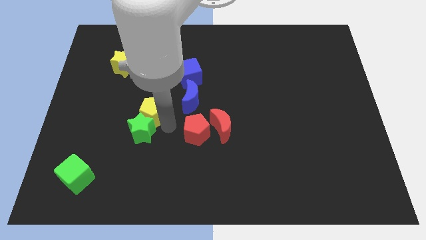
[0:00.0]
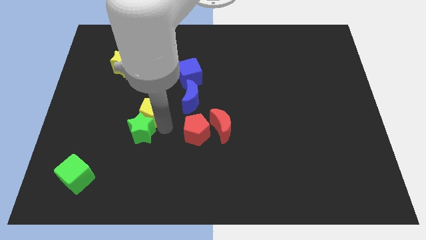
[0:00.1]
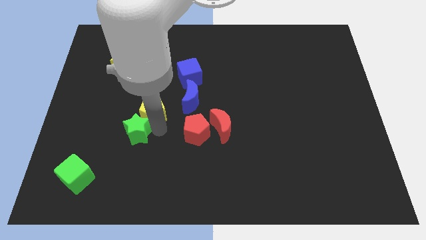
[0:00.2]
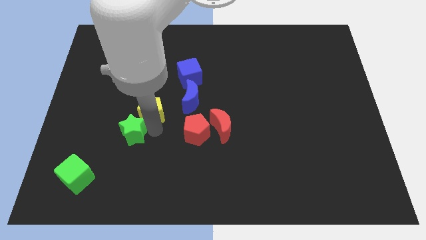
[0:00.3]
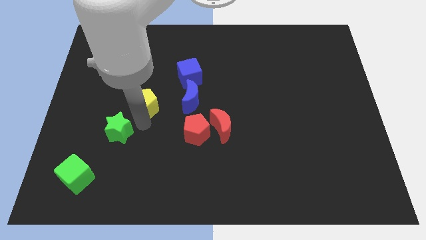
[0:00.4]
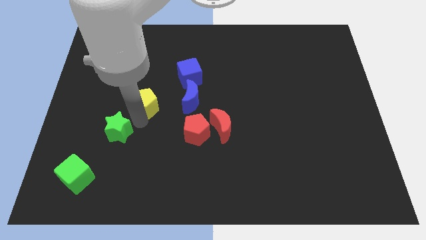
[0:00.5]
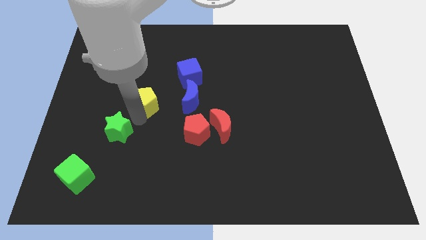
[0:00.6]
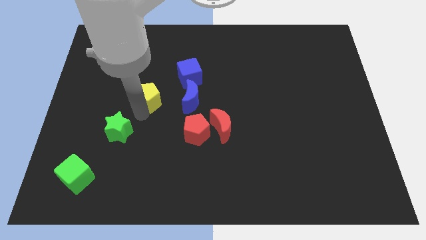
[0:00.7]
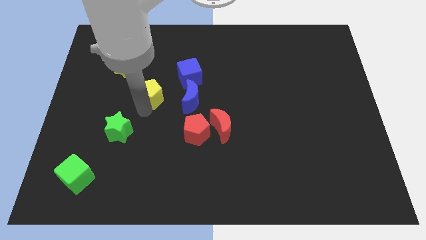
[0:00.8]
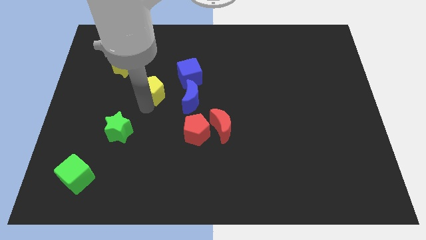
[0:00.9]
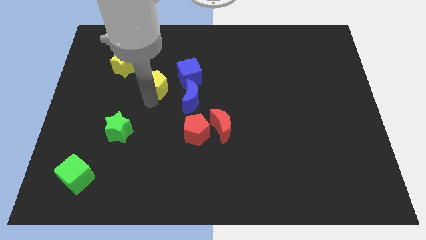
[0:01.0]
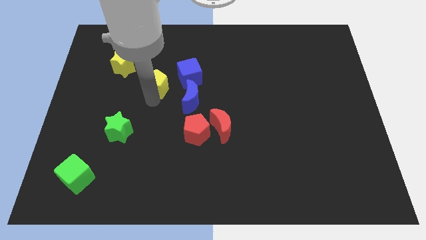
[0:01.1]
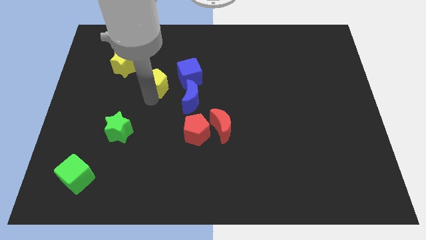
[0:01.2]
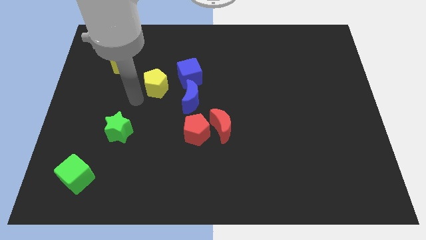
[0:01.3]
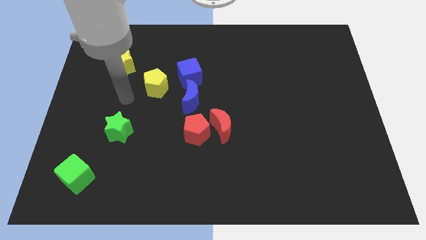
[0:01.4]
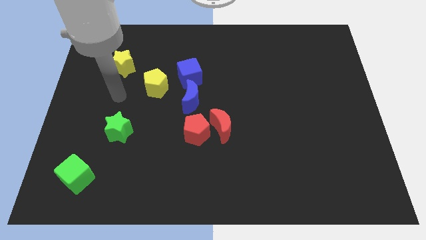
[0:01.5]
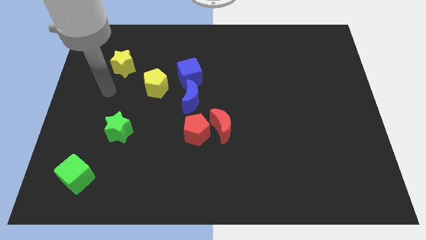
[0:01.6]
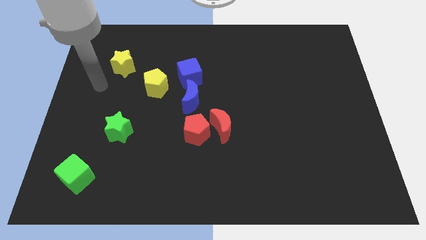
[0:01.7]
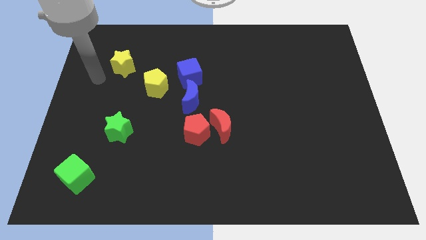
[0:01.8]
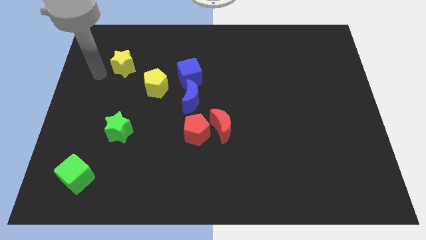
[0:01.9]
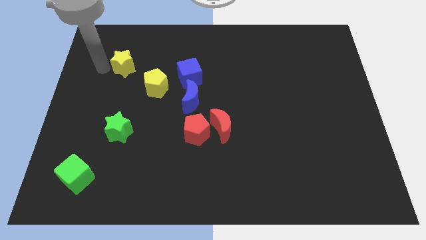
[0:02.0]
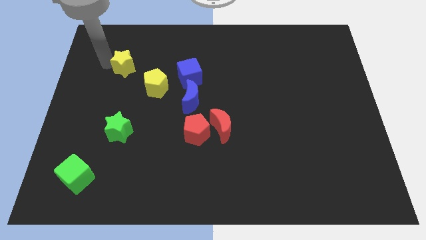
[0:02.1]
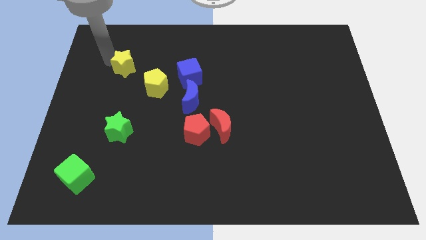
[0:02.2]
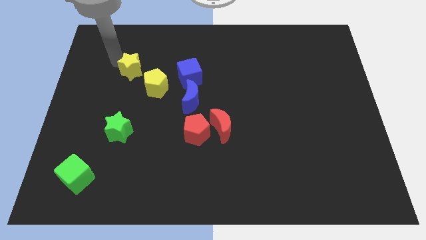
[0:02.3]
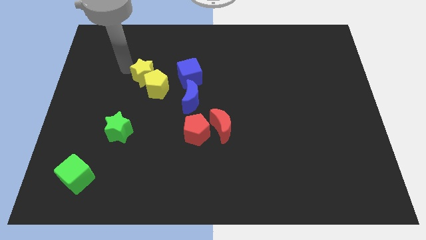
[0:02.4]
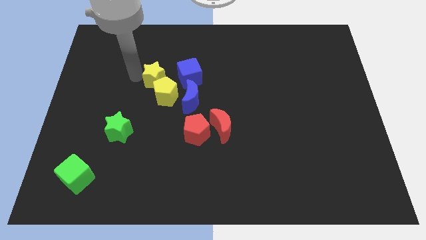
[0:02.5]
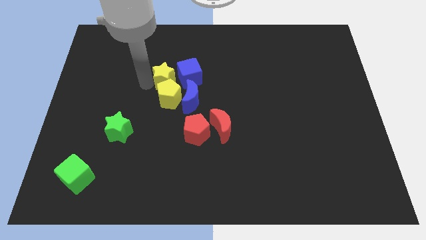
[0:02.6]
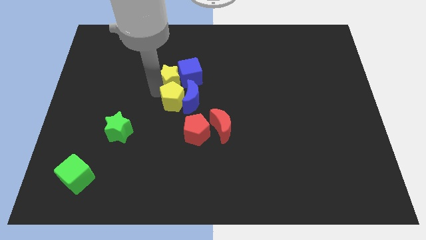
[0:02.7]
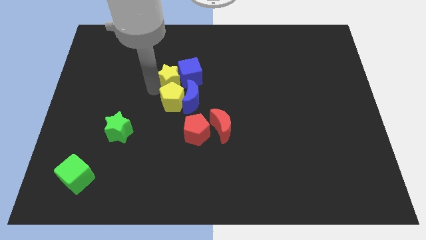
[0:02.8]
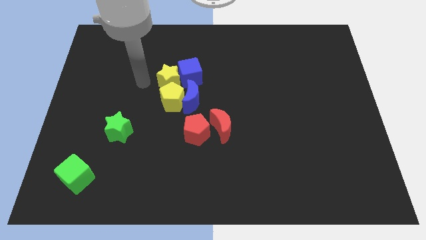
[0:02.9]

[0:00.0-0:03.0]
move the yellow star yellow pentagon into the blue blocks

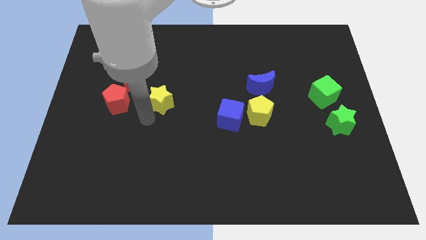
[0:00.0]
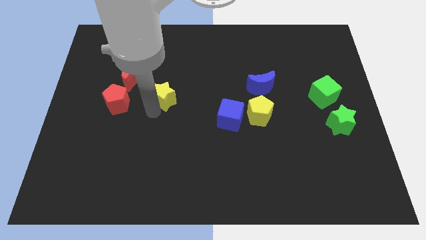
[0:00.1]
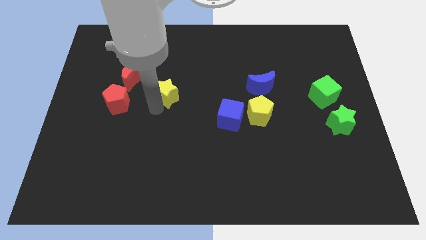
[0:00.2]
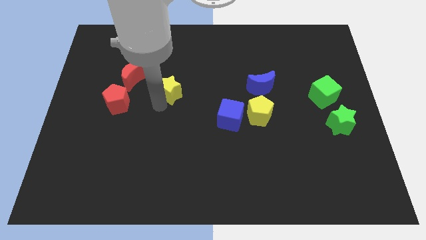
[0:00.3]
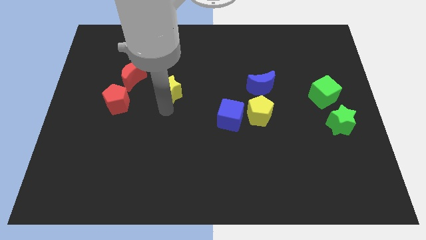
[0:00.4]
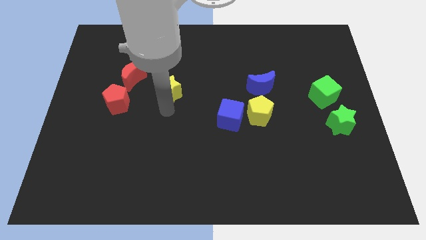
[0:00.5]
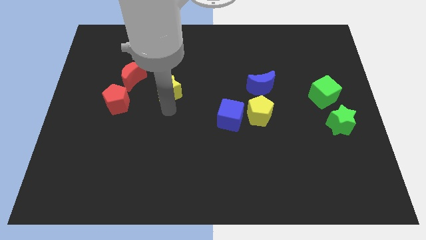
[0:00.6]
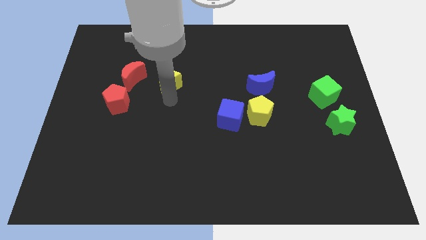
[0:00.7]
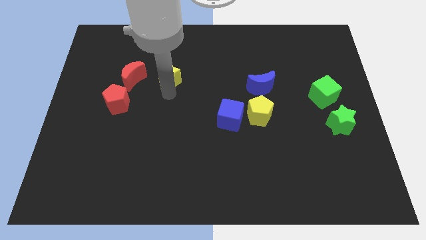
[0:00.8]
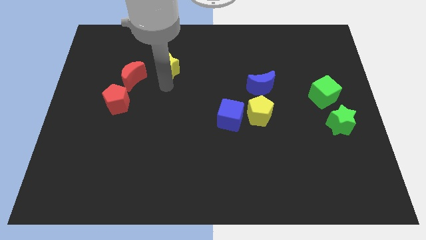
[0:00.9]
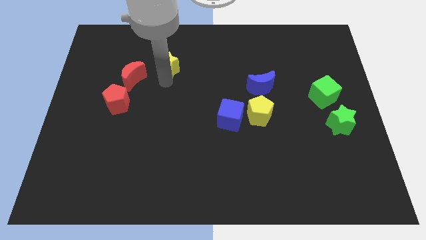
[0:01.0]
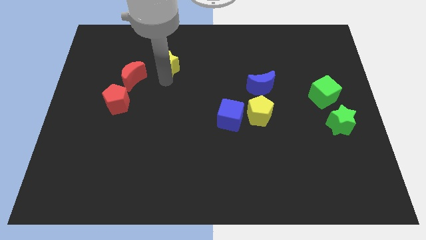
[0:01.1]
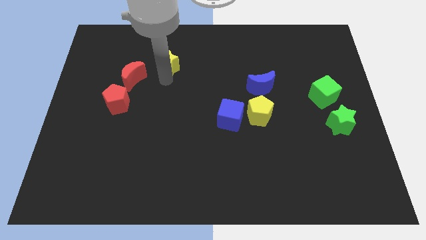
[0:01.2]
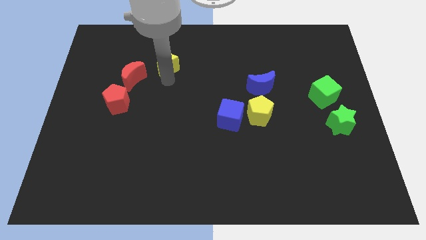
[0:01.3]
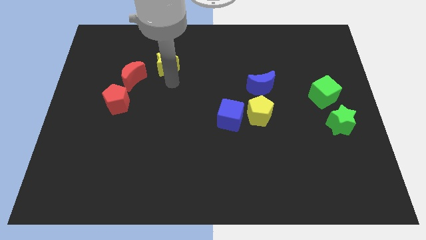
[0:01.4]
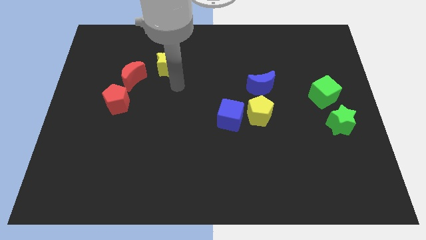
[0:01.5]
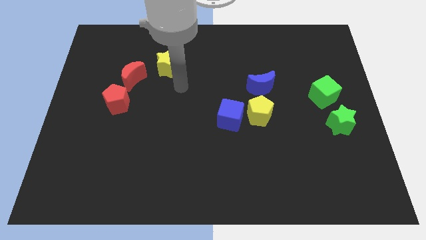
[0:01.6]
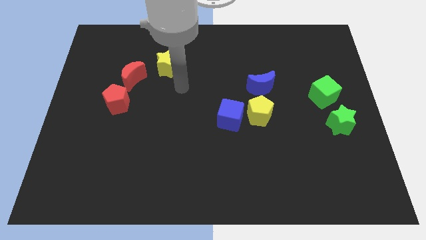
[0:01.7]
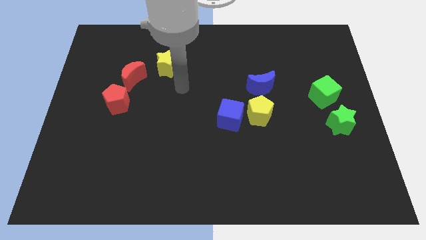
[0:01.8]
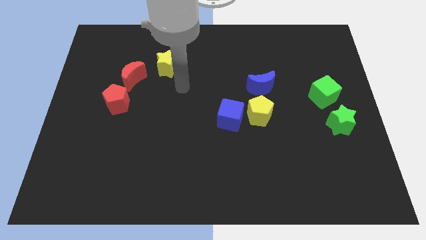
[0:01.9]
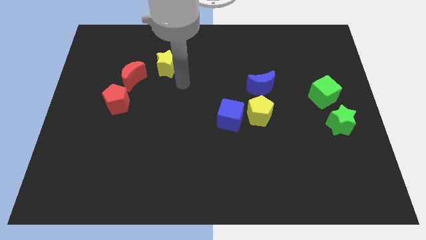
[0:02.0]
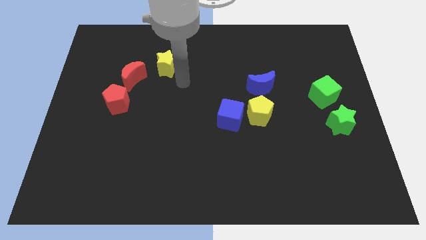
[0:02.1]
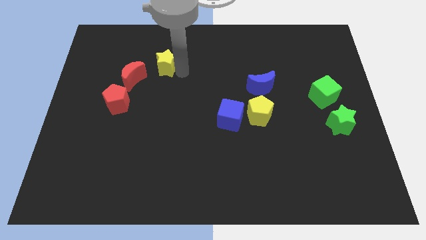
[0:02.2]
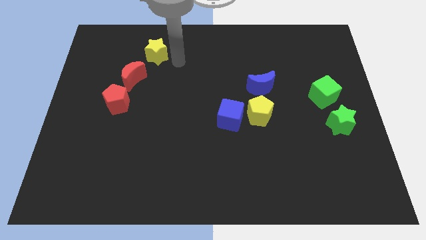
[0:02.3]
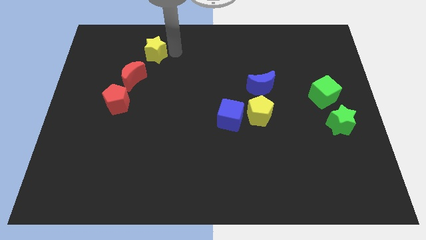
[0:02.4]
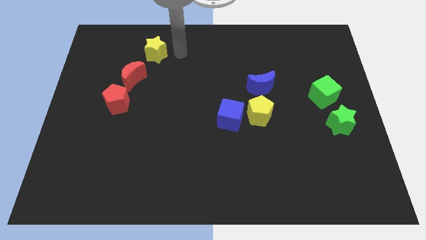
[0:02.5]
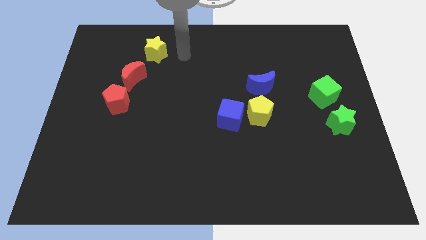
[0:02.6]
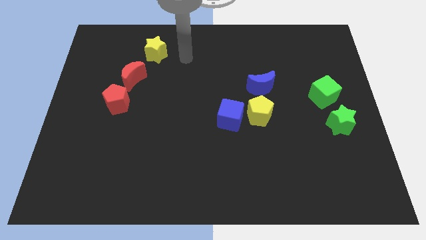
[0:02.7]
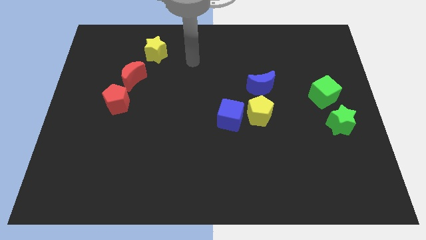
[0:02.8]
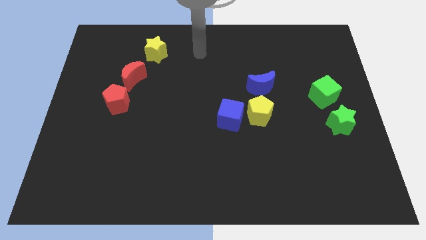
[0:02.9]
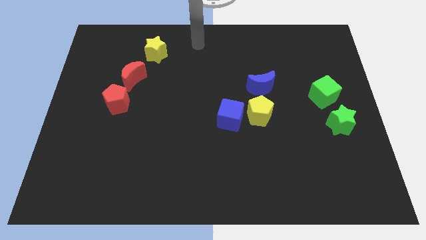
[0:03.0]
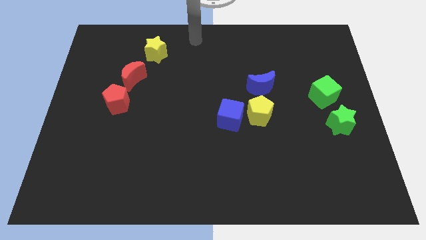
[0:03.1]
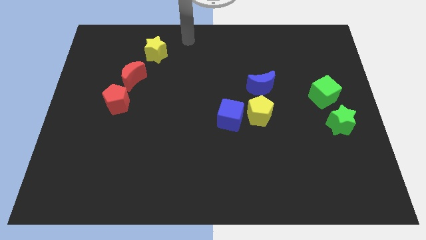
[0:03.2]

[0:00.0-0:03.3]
move the yellow star to the top side of the red moon

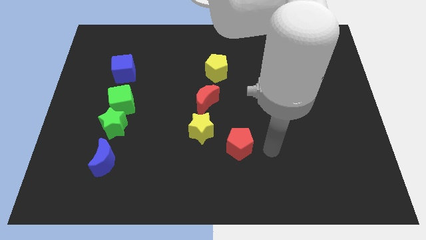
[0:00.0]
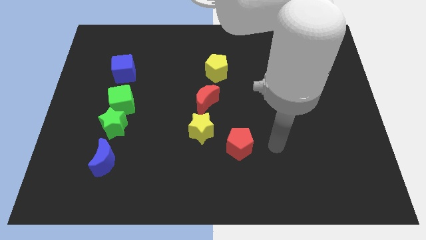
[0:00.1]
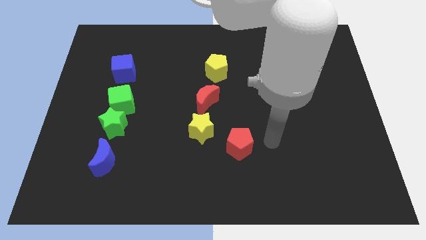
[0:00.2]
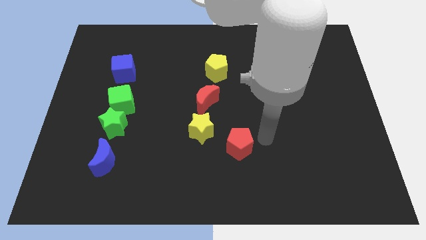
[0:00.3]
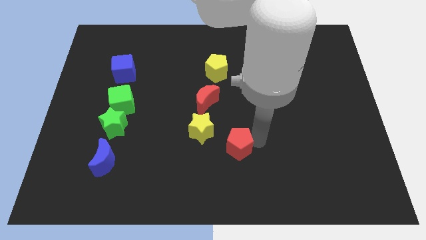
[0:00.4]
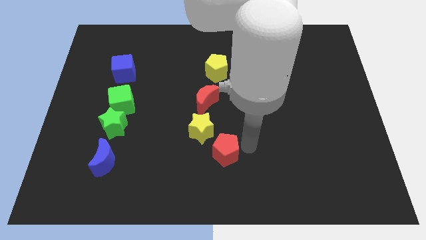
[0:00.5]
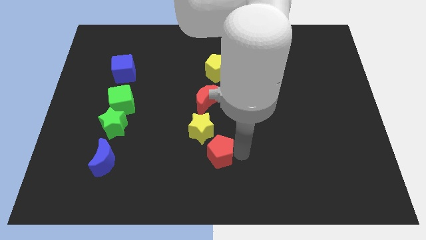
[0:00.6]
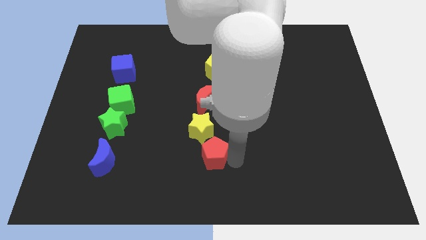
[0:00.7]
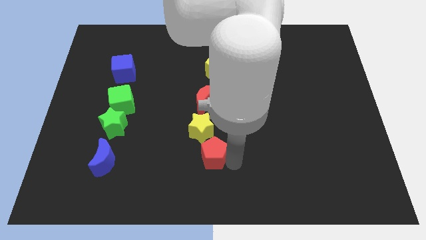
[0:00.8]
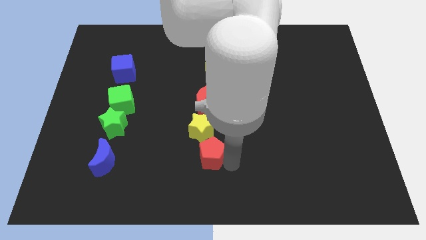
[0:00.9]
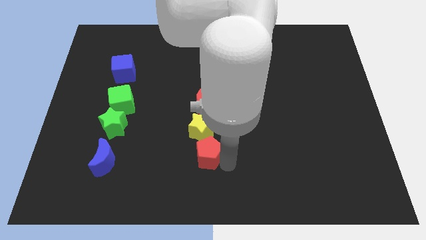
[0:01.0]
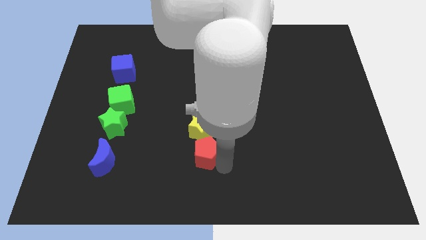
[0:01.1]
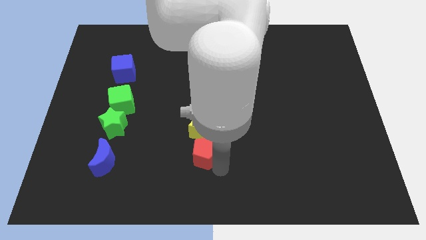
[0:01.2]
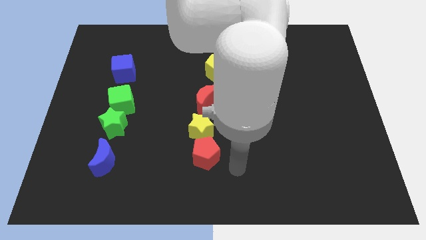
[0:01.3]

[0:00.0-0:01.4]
place the red pentagon to the bottom of the red pentagon

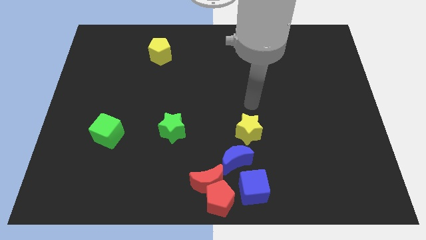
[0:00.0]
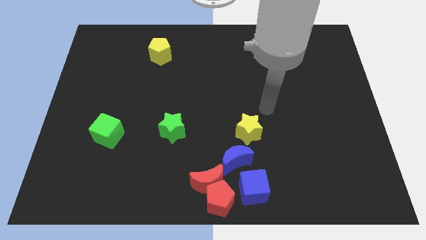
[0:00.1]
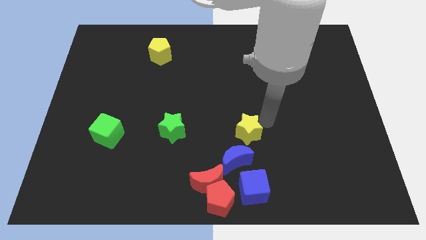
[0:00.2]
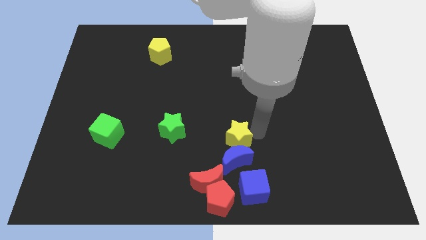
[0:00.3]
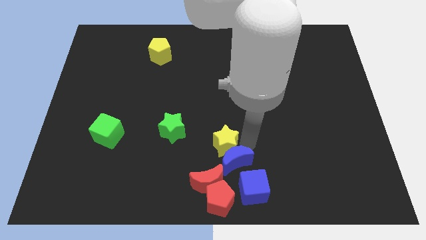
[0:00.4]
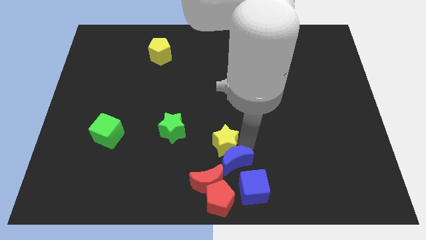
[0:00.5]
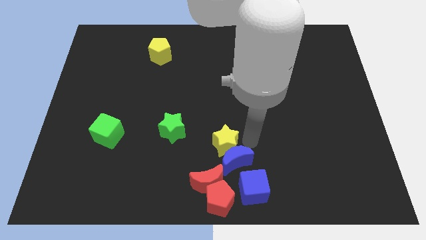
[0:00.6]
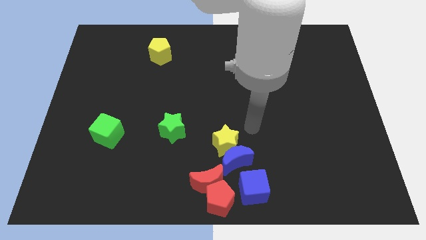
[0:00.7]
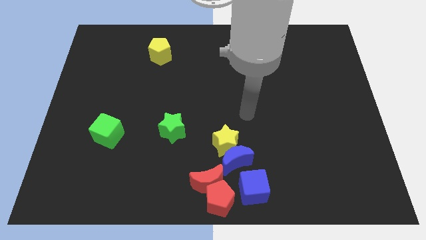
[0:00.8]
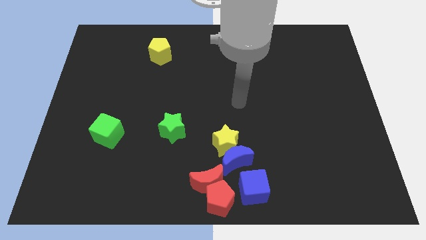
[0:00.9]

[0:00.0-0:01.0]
place the yellow star above the blue moon

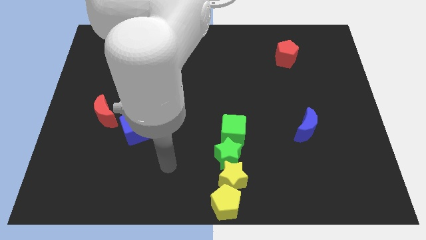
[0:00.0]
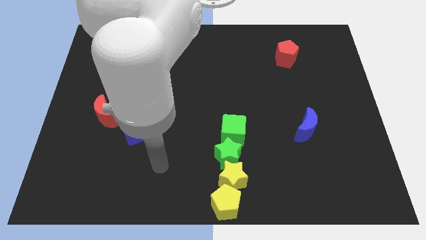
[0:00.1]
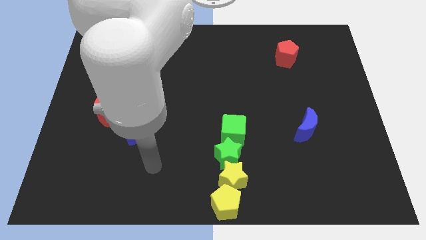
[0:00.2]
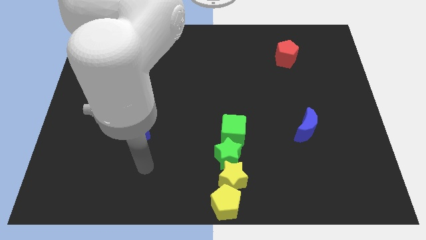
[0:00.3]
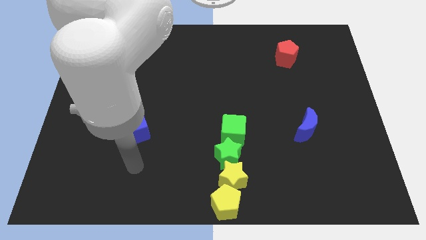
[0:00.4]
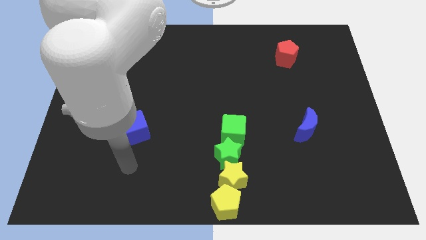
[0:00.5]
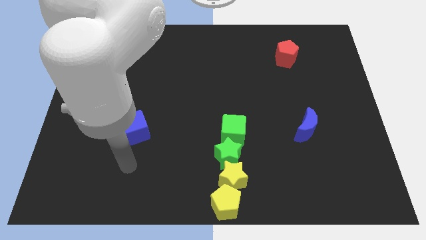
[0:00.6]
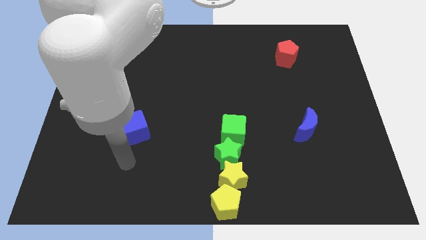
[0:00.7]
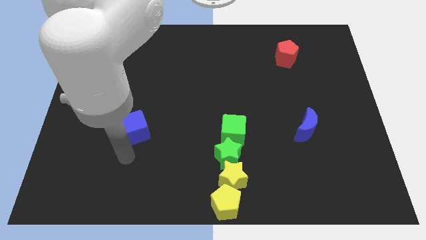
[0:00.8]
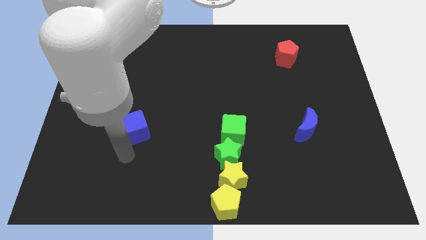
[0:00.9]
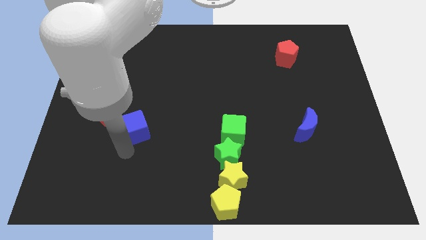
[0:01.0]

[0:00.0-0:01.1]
touch the bottom side of the blue cube
